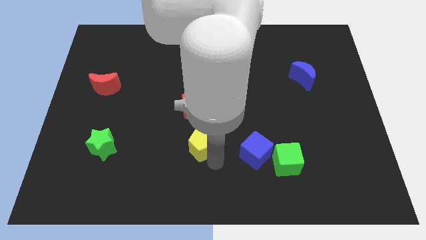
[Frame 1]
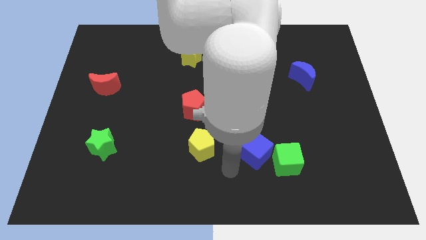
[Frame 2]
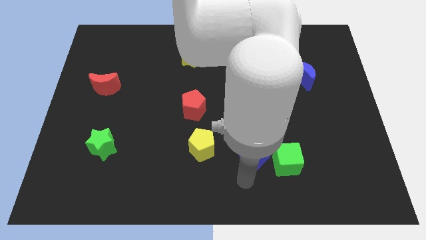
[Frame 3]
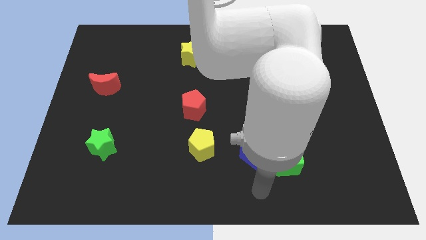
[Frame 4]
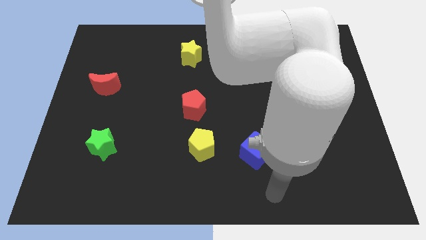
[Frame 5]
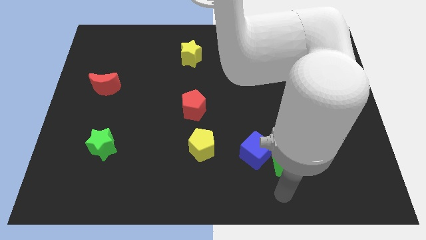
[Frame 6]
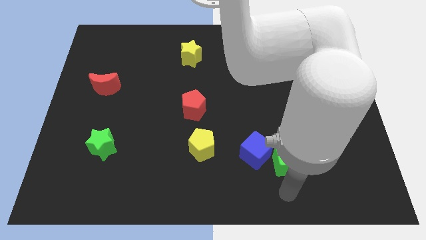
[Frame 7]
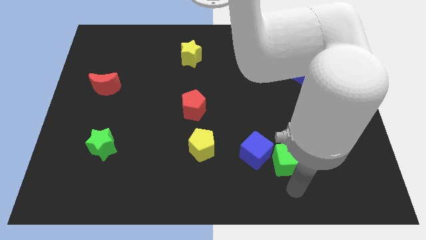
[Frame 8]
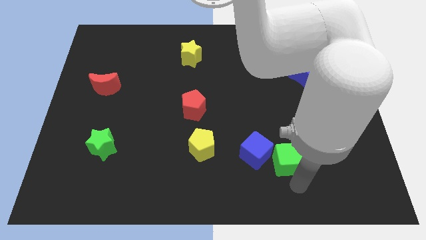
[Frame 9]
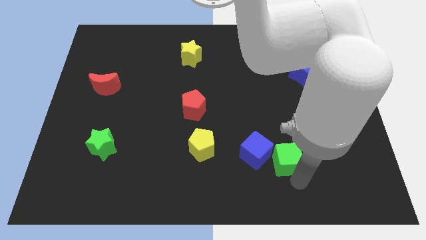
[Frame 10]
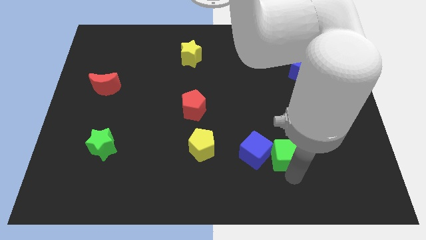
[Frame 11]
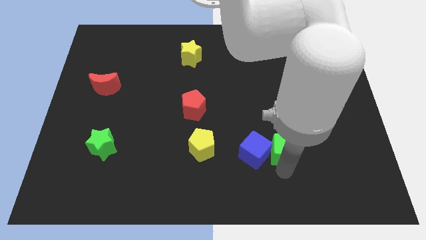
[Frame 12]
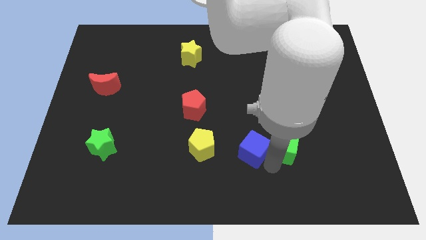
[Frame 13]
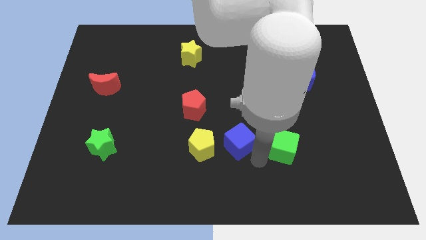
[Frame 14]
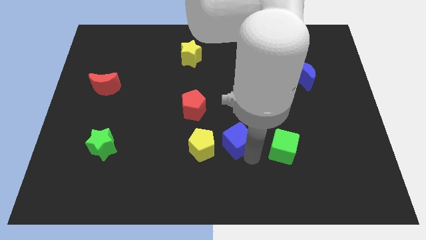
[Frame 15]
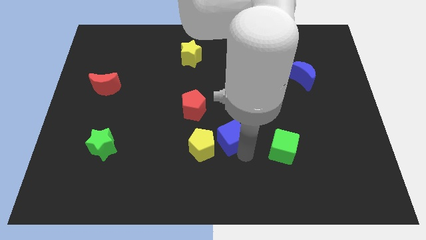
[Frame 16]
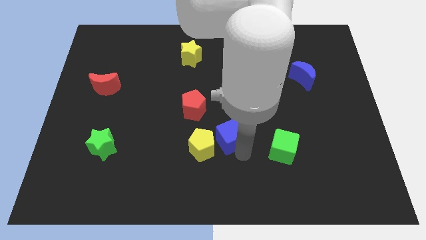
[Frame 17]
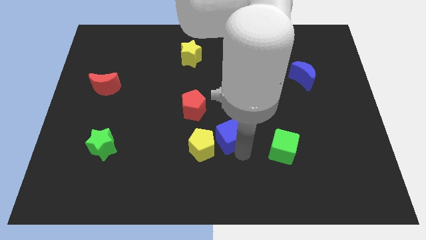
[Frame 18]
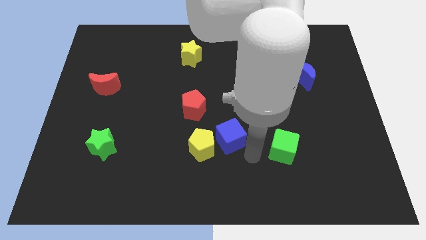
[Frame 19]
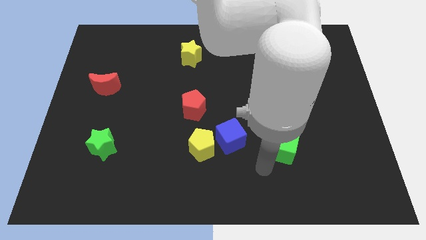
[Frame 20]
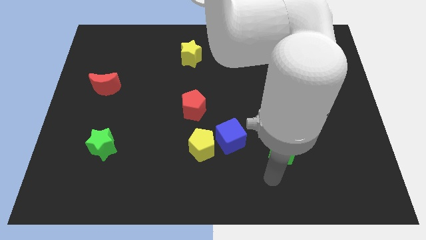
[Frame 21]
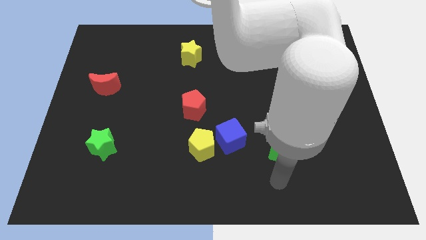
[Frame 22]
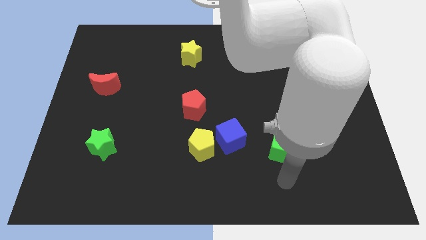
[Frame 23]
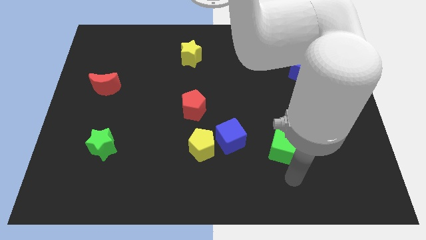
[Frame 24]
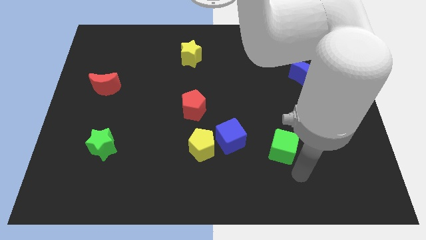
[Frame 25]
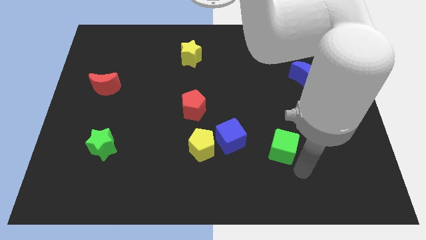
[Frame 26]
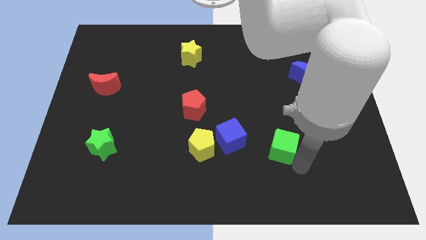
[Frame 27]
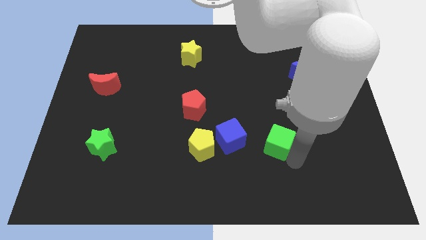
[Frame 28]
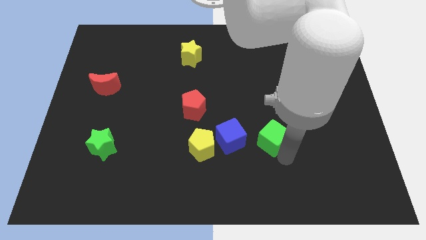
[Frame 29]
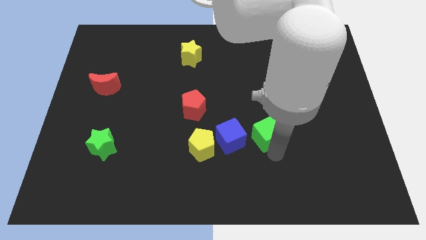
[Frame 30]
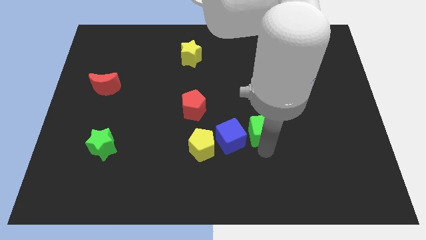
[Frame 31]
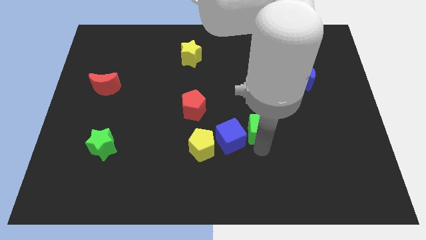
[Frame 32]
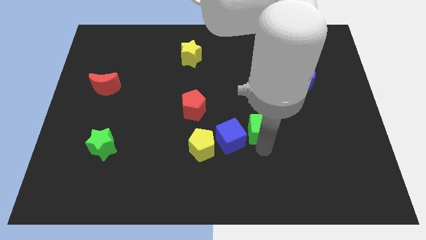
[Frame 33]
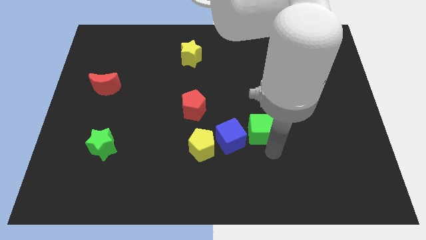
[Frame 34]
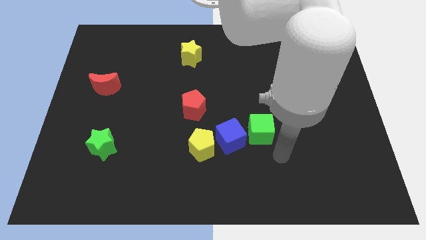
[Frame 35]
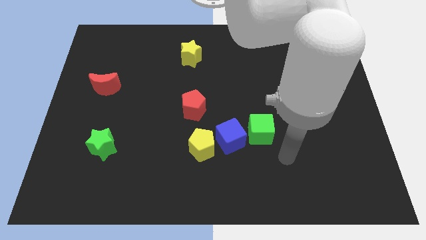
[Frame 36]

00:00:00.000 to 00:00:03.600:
place the green cube right to the blue cube
